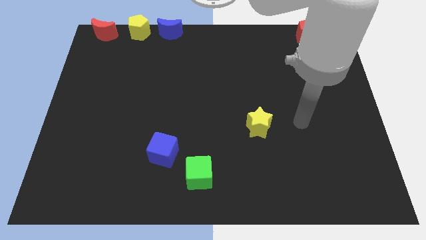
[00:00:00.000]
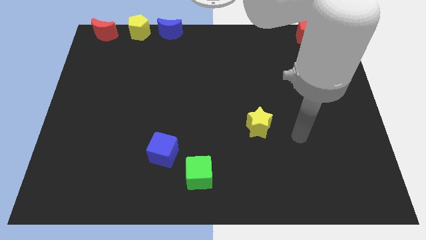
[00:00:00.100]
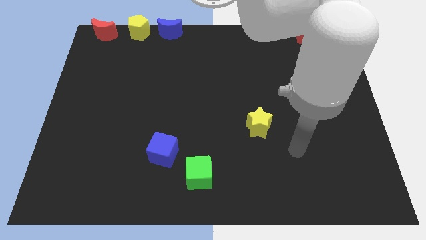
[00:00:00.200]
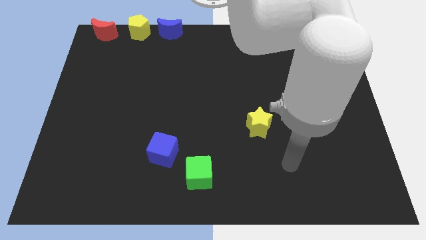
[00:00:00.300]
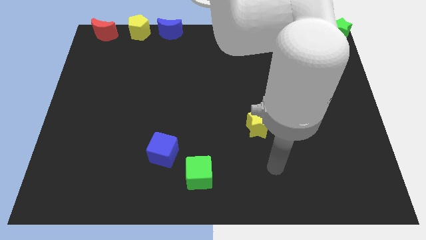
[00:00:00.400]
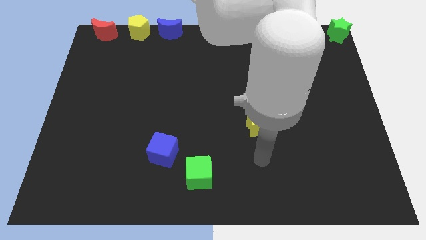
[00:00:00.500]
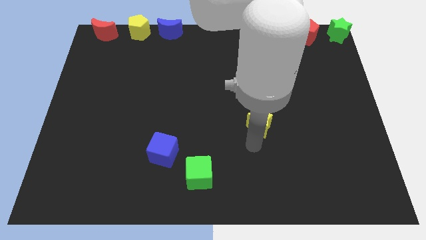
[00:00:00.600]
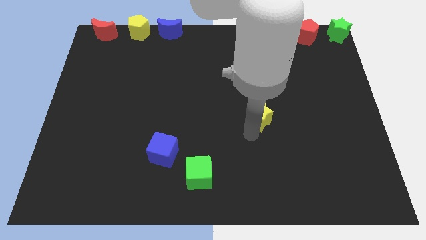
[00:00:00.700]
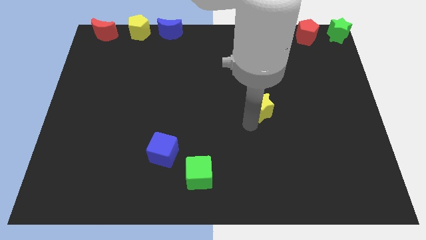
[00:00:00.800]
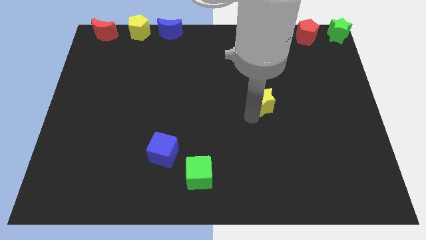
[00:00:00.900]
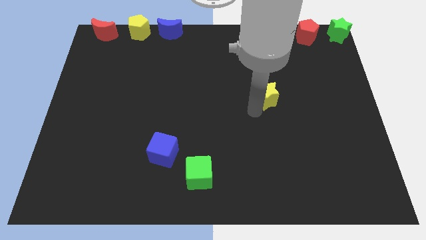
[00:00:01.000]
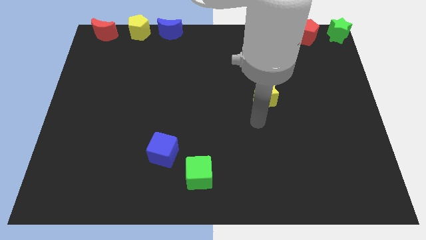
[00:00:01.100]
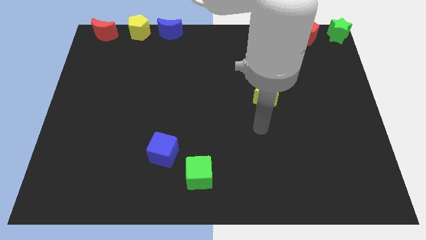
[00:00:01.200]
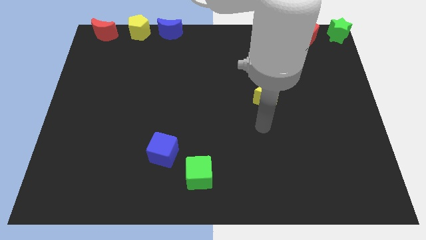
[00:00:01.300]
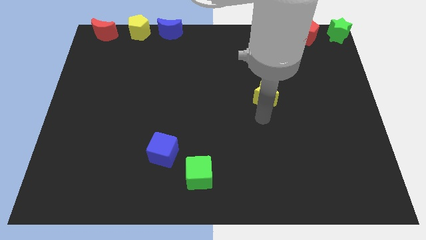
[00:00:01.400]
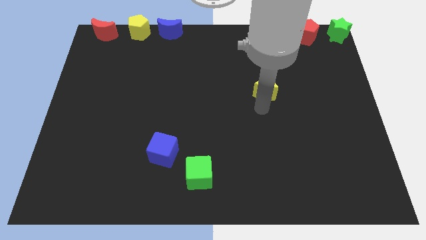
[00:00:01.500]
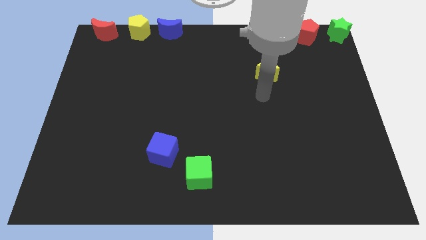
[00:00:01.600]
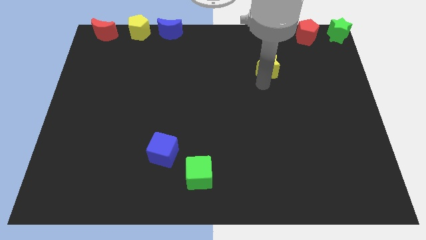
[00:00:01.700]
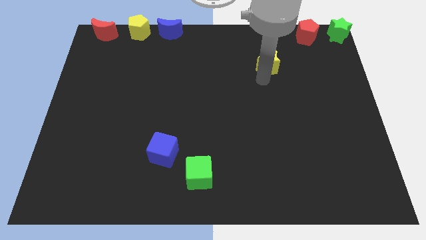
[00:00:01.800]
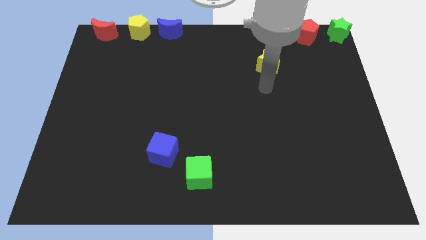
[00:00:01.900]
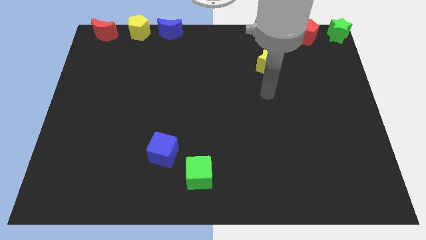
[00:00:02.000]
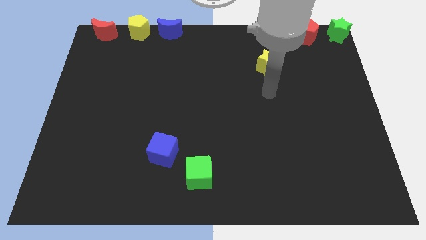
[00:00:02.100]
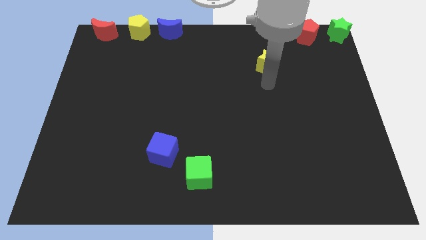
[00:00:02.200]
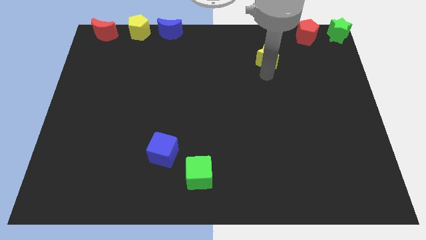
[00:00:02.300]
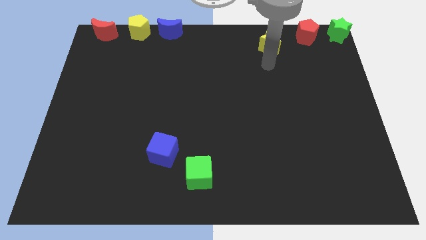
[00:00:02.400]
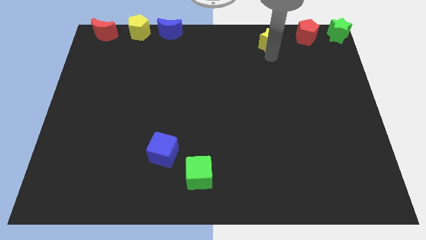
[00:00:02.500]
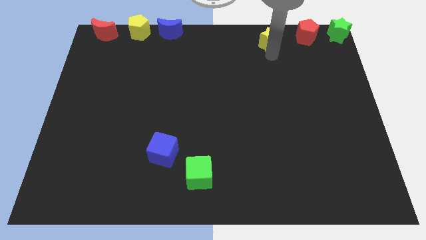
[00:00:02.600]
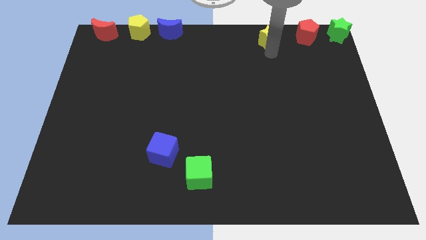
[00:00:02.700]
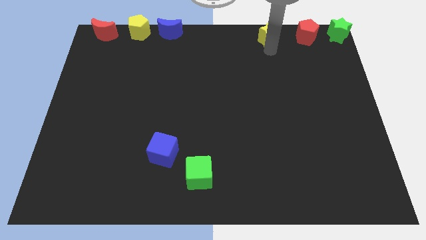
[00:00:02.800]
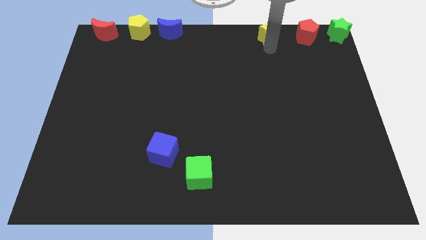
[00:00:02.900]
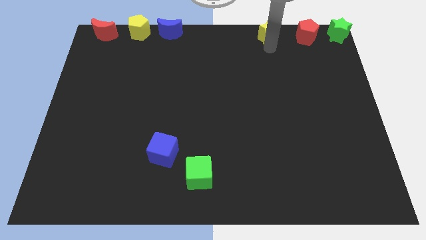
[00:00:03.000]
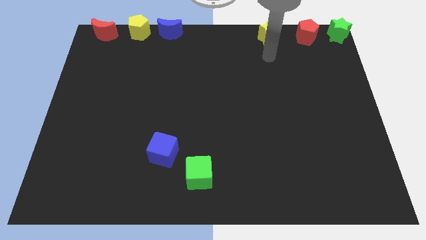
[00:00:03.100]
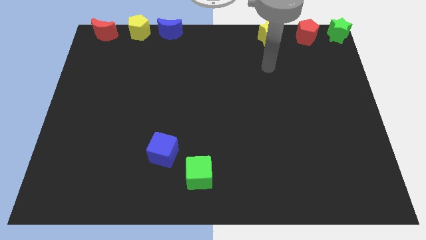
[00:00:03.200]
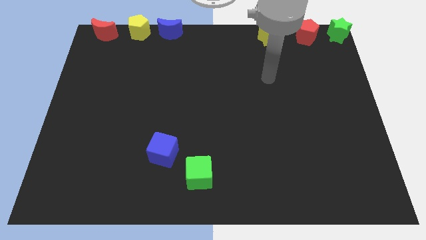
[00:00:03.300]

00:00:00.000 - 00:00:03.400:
slide the yellow star to the left side of the red pentagon

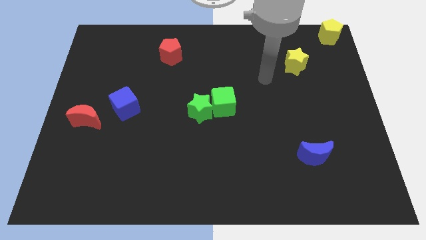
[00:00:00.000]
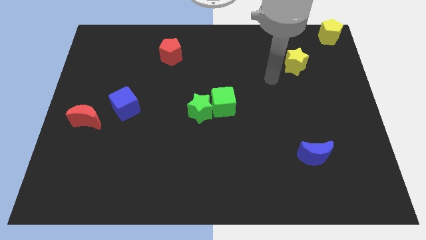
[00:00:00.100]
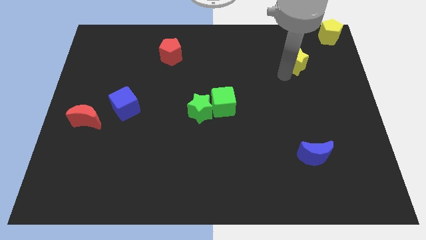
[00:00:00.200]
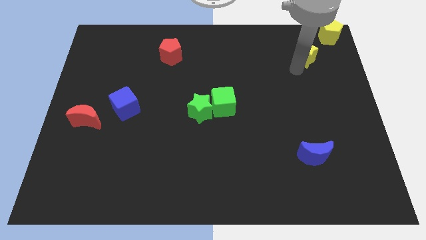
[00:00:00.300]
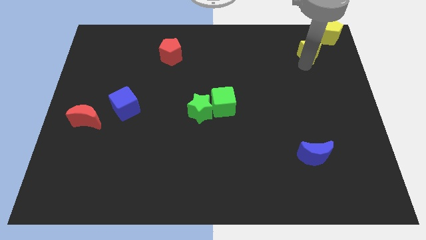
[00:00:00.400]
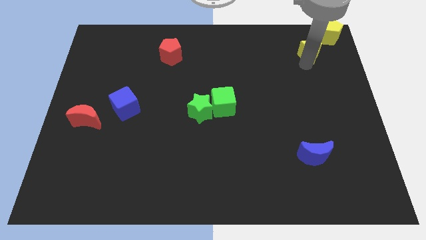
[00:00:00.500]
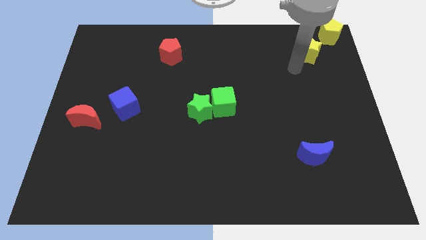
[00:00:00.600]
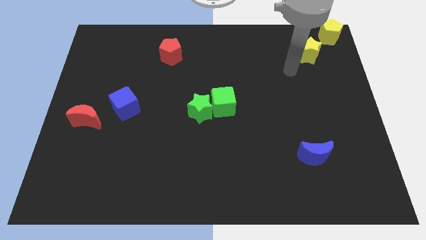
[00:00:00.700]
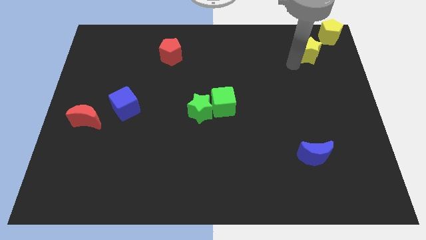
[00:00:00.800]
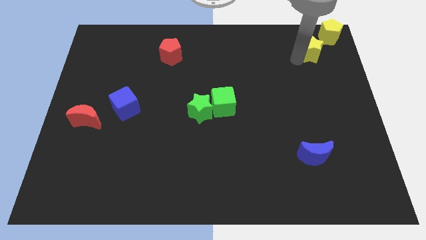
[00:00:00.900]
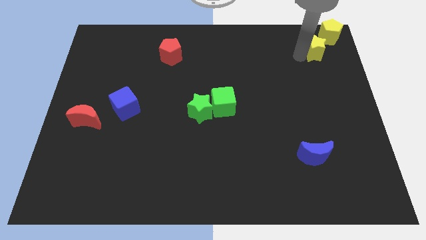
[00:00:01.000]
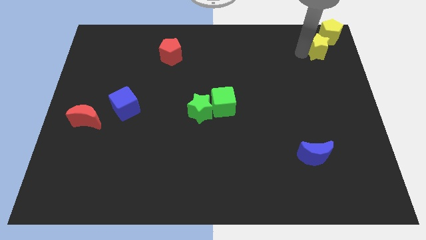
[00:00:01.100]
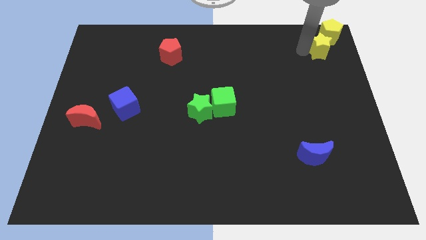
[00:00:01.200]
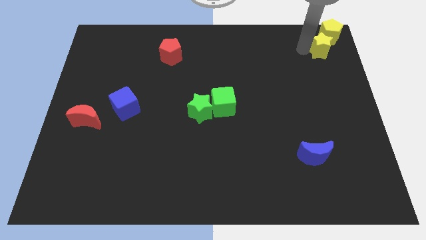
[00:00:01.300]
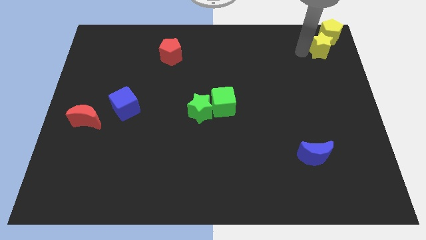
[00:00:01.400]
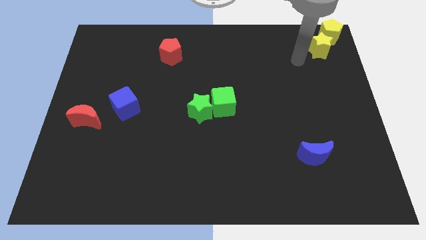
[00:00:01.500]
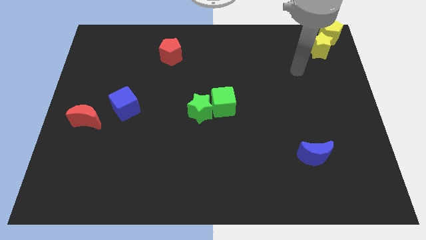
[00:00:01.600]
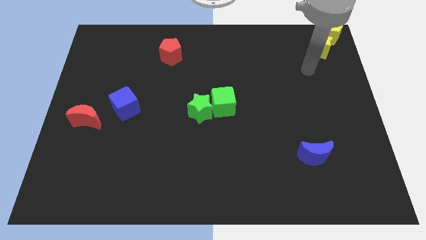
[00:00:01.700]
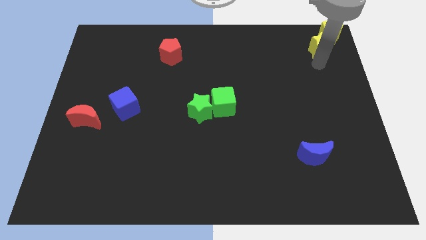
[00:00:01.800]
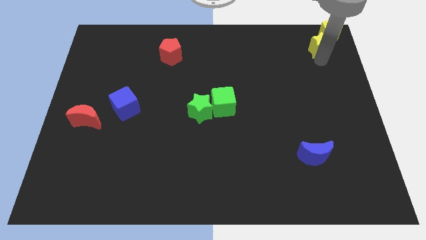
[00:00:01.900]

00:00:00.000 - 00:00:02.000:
push the yellow star to the bottom of the yellow pentagon

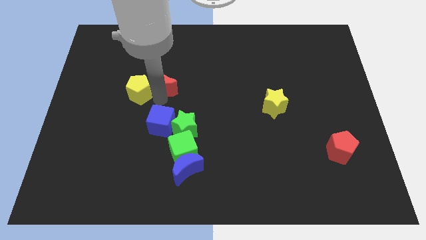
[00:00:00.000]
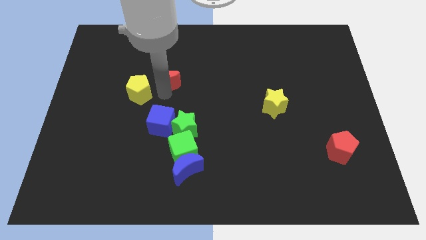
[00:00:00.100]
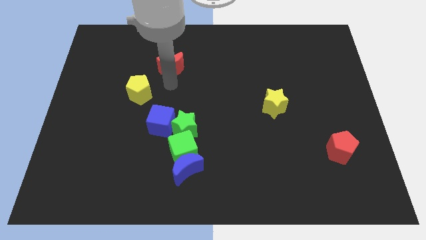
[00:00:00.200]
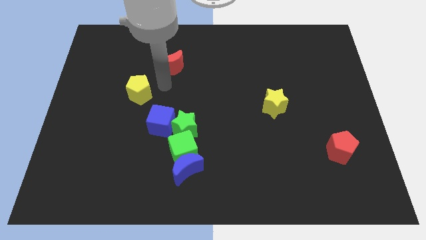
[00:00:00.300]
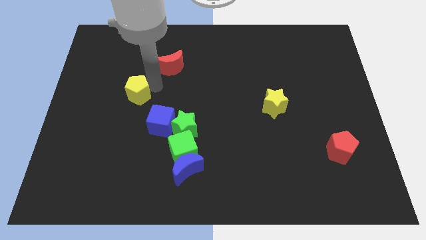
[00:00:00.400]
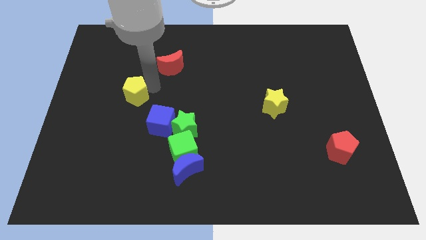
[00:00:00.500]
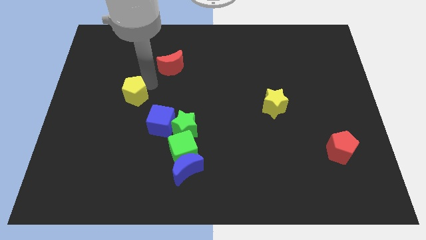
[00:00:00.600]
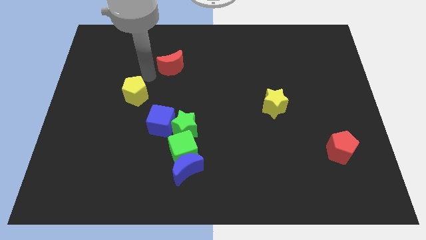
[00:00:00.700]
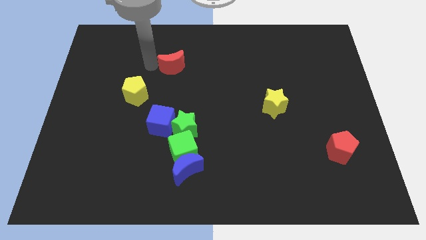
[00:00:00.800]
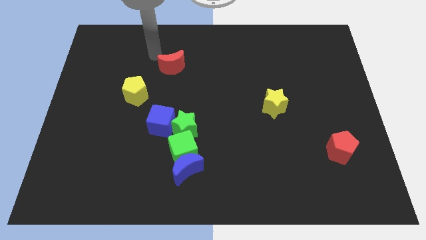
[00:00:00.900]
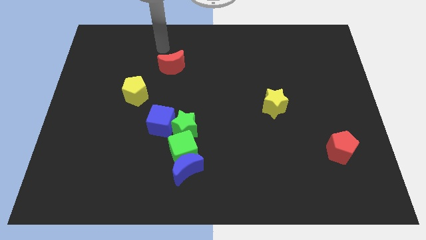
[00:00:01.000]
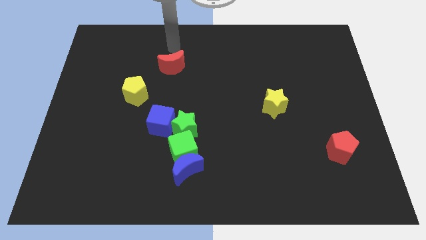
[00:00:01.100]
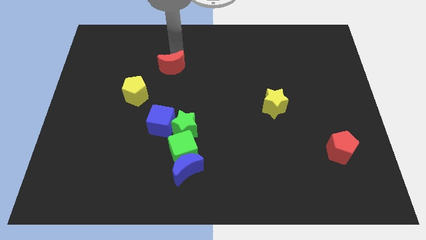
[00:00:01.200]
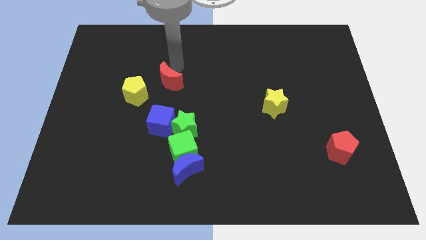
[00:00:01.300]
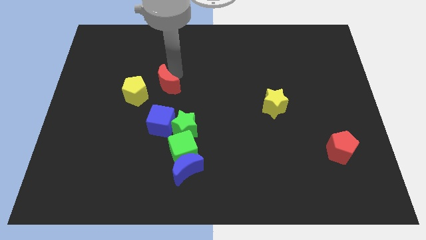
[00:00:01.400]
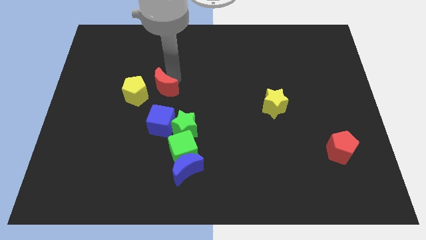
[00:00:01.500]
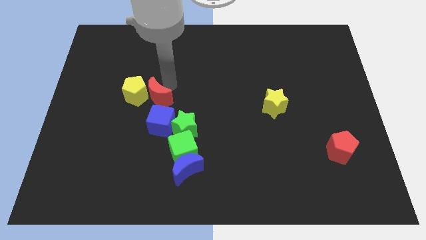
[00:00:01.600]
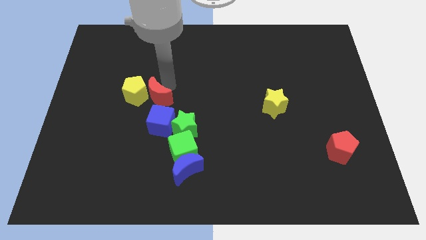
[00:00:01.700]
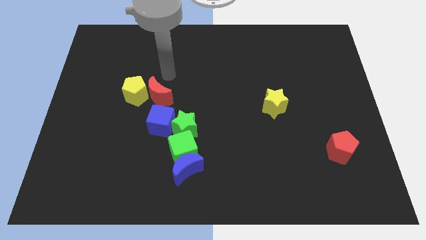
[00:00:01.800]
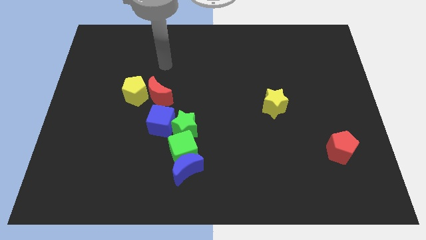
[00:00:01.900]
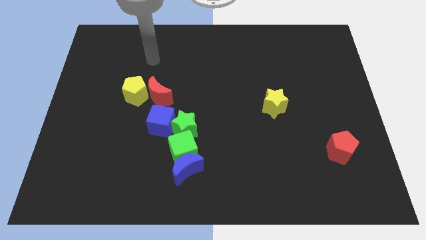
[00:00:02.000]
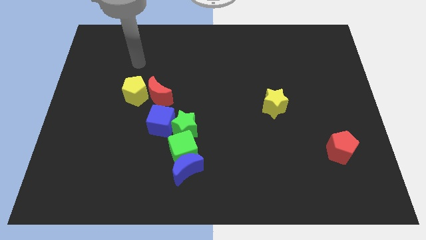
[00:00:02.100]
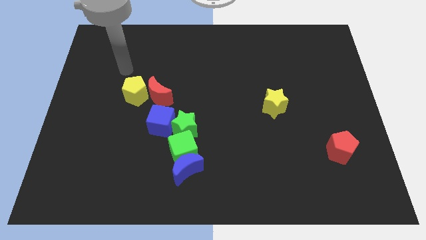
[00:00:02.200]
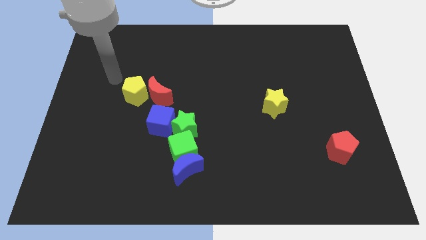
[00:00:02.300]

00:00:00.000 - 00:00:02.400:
push the red moon above the blue cube

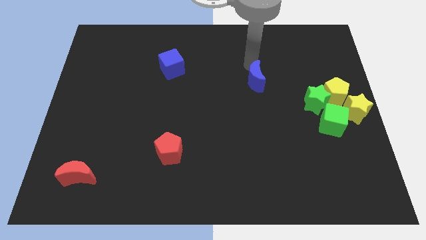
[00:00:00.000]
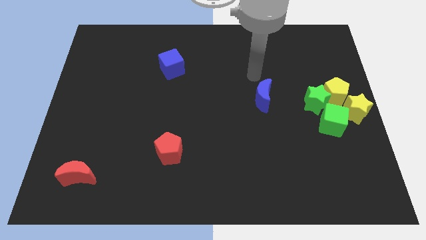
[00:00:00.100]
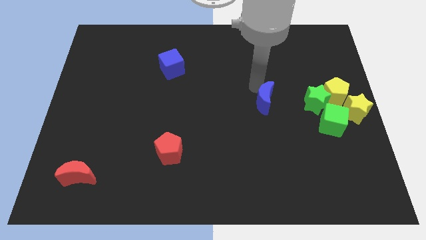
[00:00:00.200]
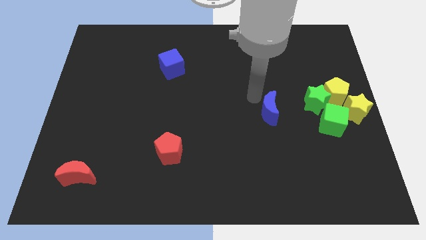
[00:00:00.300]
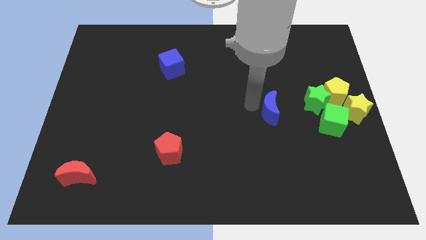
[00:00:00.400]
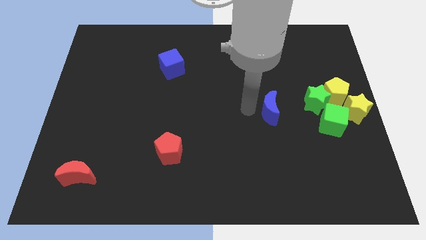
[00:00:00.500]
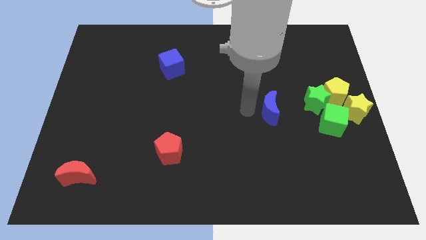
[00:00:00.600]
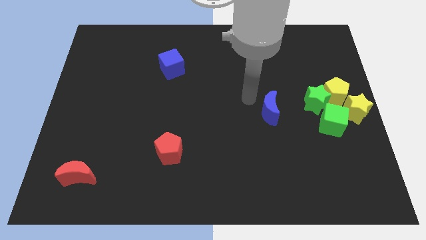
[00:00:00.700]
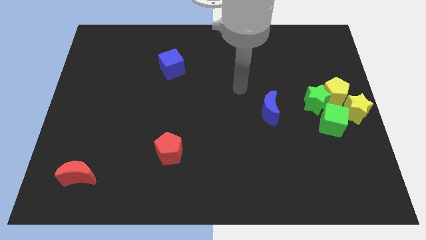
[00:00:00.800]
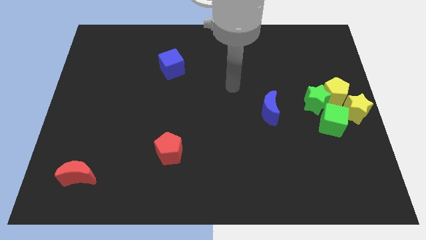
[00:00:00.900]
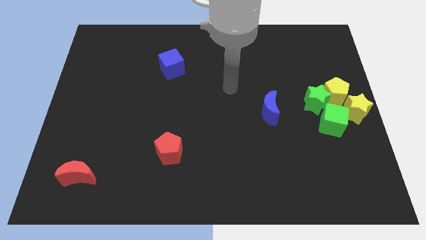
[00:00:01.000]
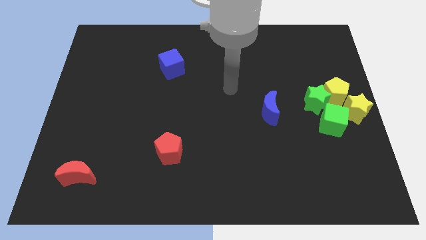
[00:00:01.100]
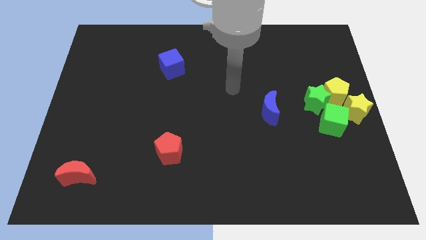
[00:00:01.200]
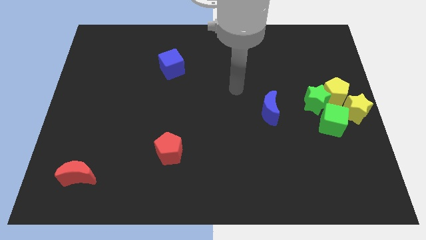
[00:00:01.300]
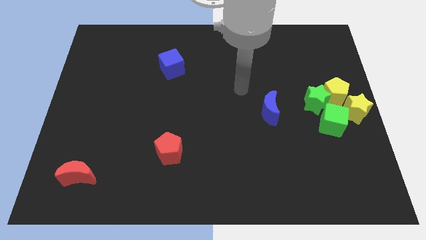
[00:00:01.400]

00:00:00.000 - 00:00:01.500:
move blue moon towards the center right
